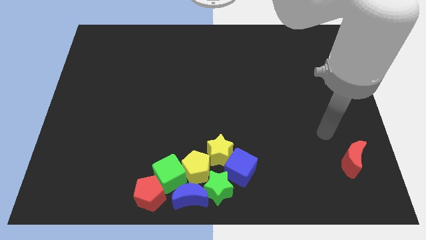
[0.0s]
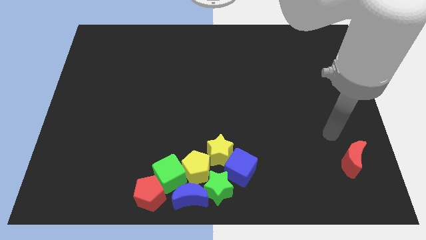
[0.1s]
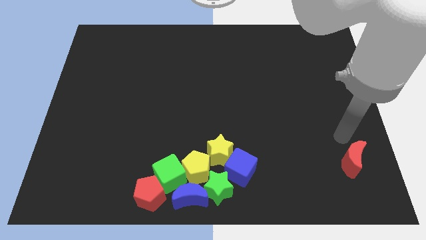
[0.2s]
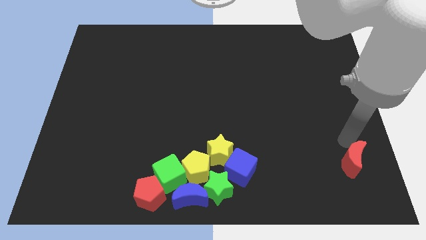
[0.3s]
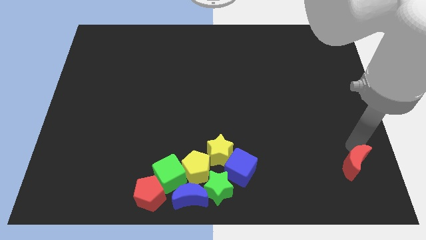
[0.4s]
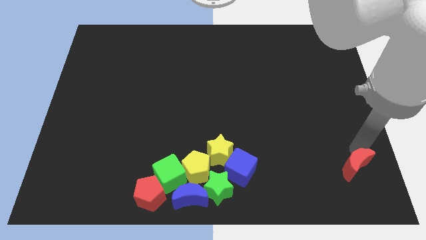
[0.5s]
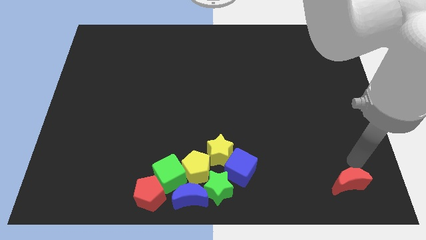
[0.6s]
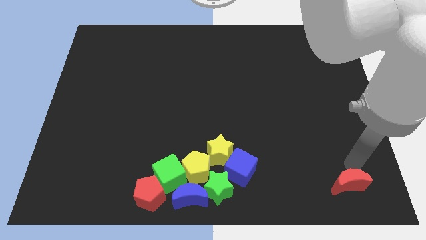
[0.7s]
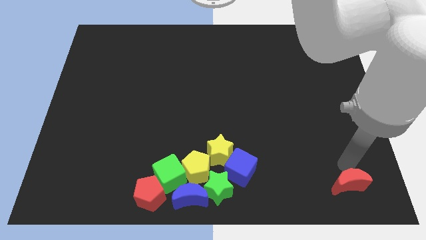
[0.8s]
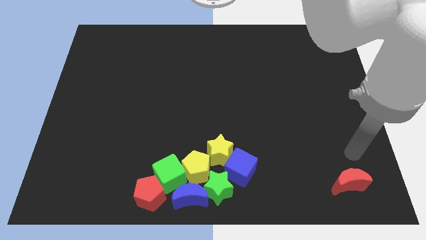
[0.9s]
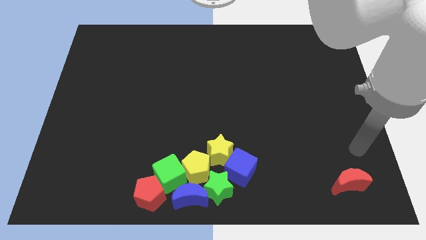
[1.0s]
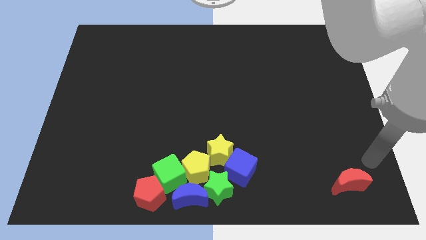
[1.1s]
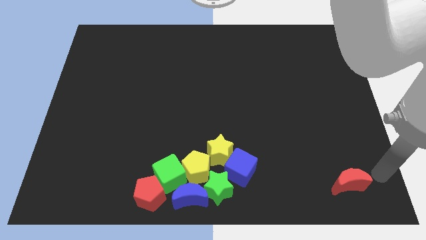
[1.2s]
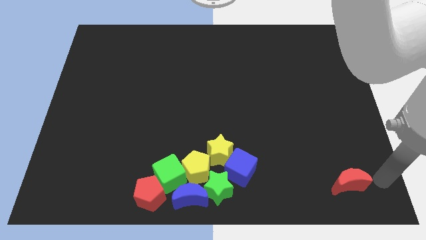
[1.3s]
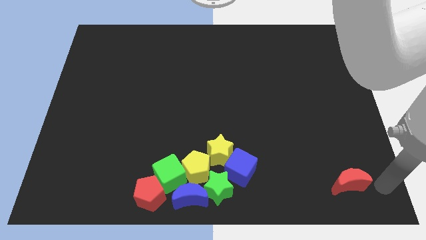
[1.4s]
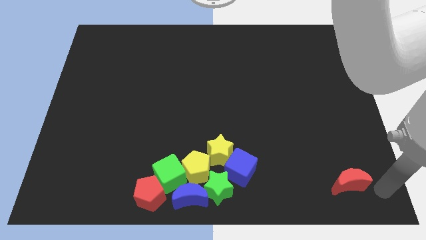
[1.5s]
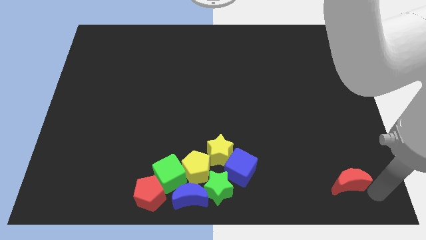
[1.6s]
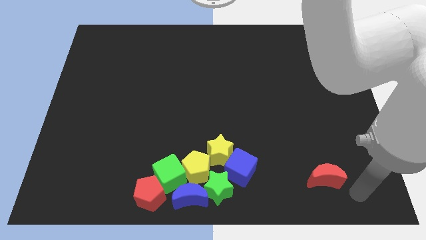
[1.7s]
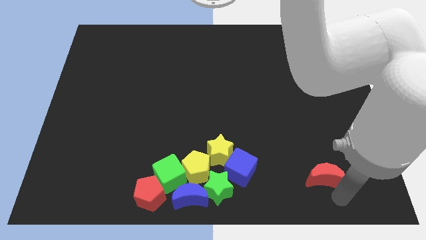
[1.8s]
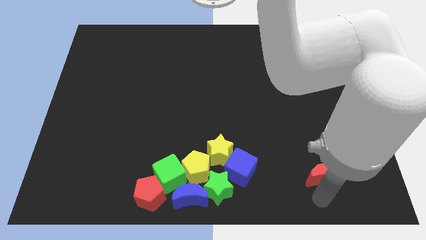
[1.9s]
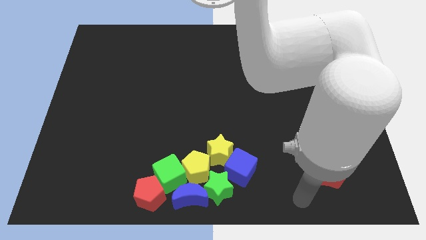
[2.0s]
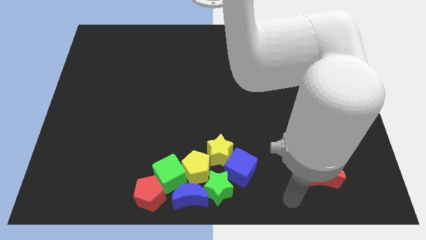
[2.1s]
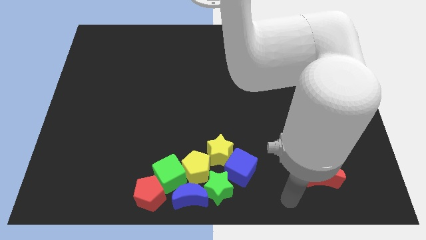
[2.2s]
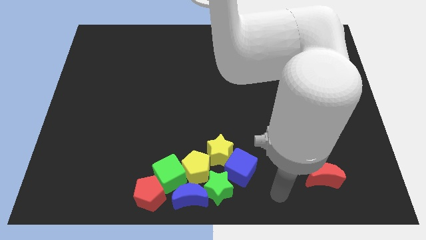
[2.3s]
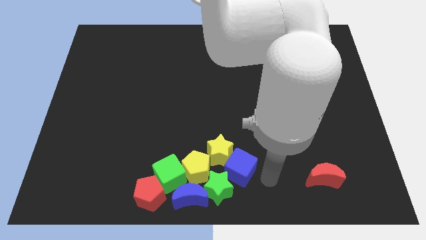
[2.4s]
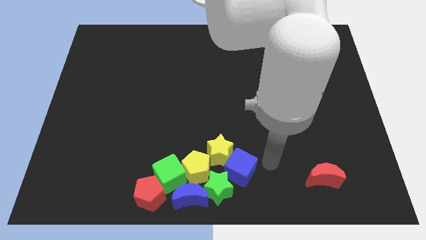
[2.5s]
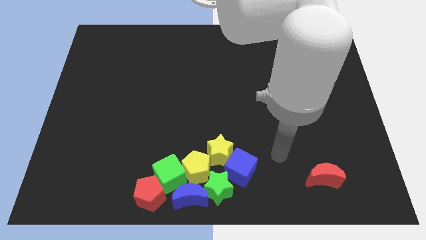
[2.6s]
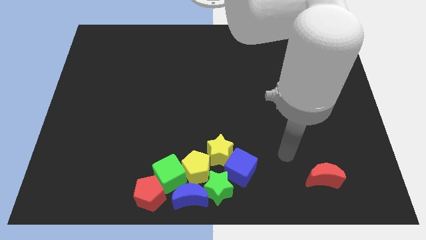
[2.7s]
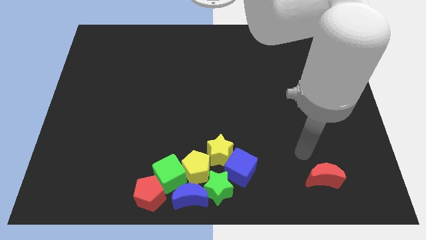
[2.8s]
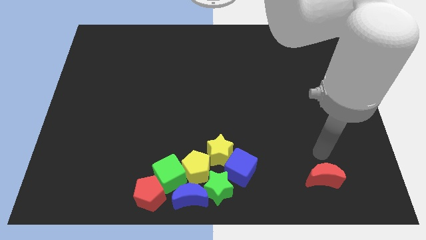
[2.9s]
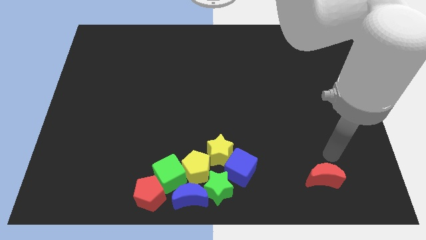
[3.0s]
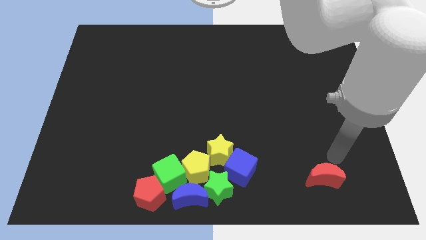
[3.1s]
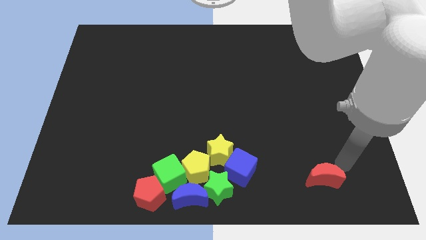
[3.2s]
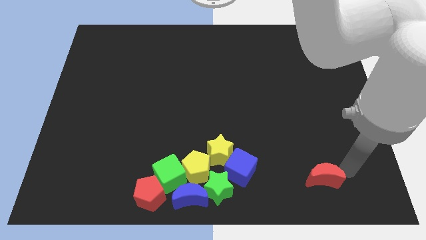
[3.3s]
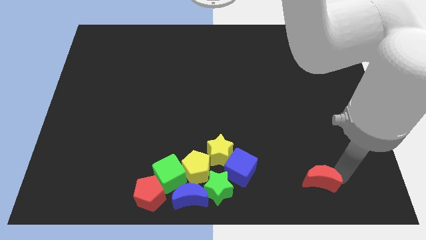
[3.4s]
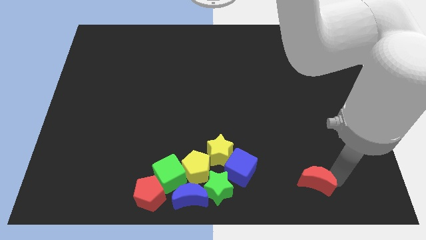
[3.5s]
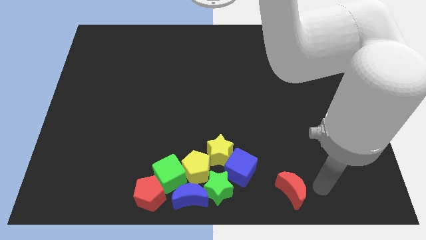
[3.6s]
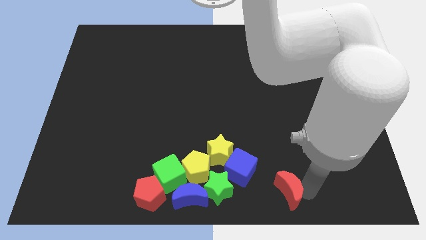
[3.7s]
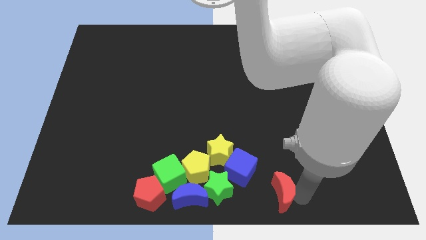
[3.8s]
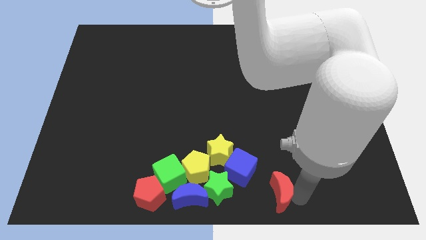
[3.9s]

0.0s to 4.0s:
place red moon to the bottom right of the blue cube

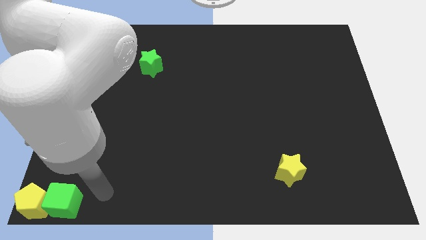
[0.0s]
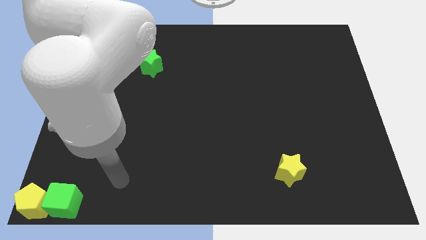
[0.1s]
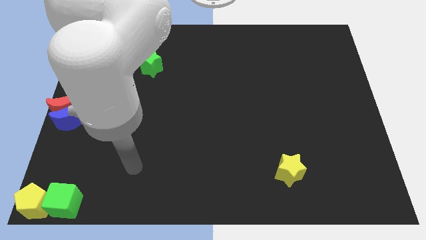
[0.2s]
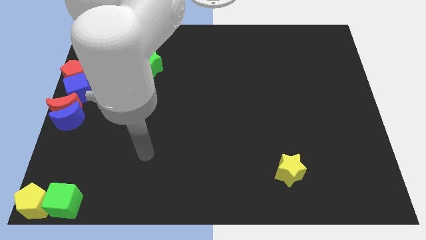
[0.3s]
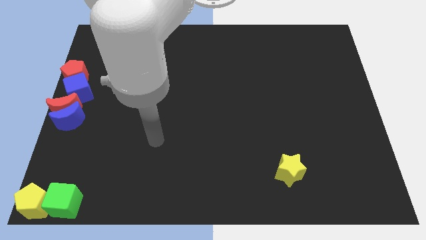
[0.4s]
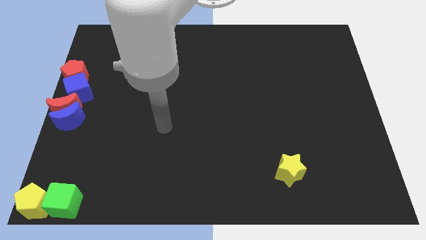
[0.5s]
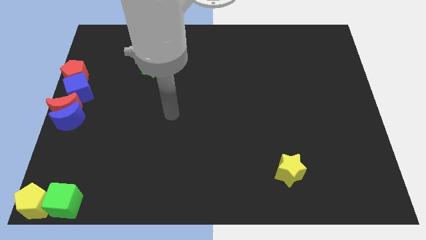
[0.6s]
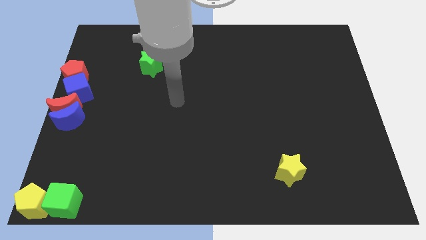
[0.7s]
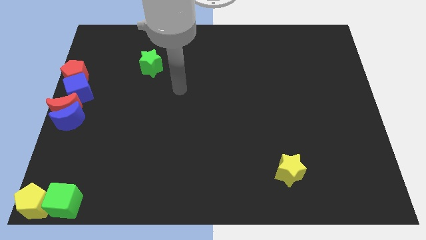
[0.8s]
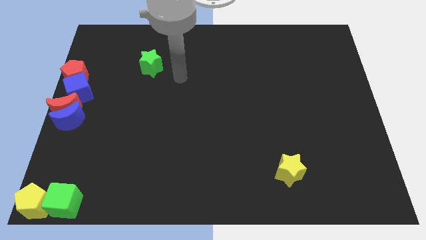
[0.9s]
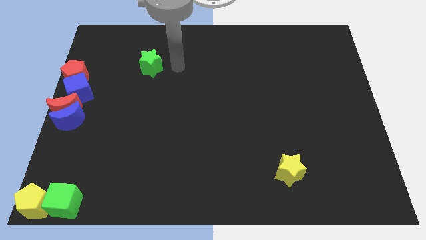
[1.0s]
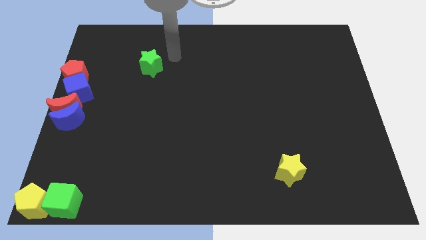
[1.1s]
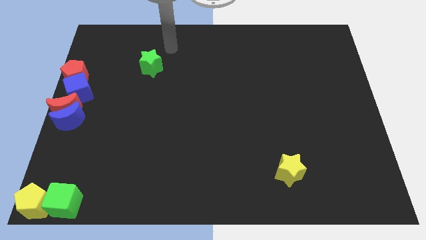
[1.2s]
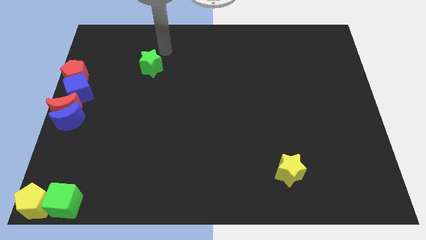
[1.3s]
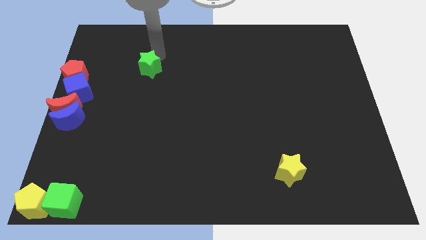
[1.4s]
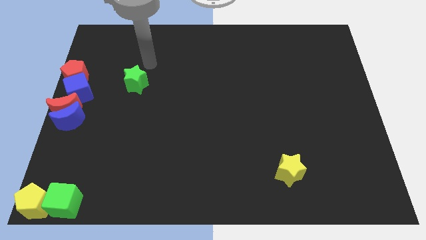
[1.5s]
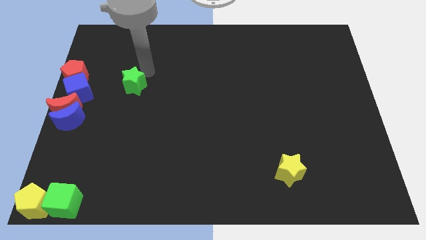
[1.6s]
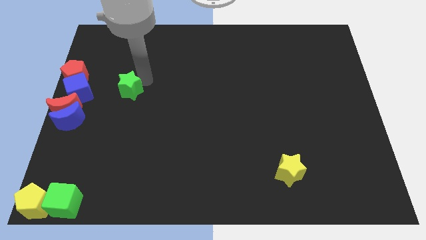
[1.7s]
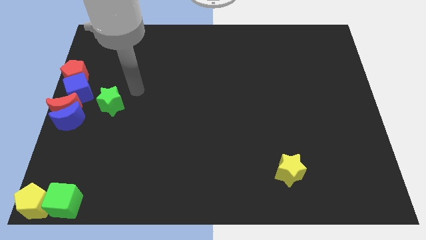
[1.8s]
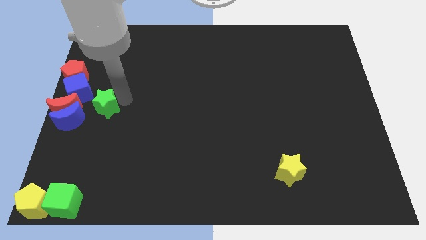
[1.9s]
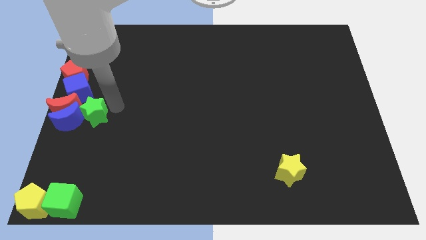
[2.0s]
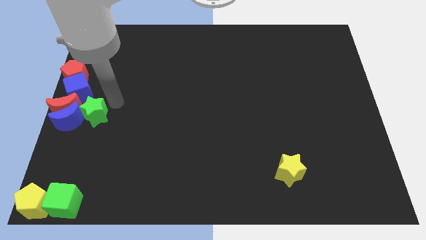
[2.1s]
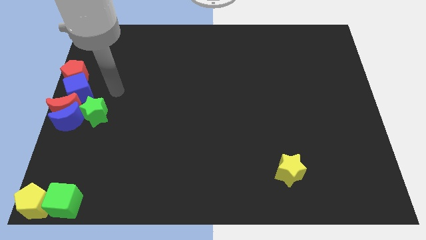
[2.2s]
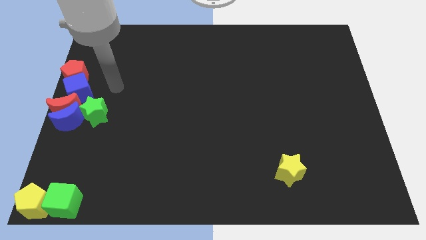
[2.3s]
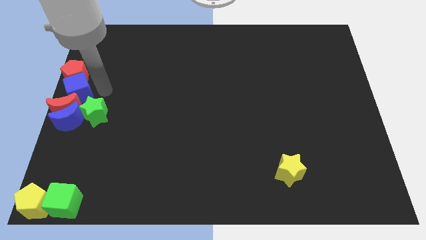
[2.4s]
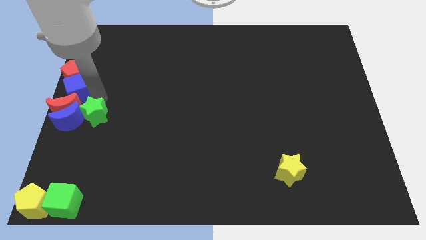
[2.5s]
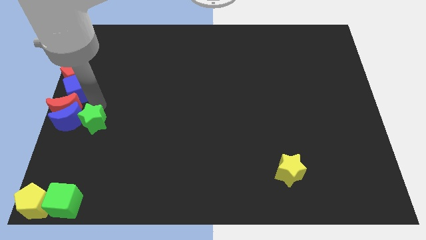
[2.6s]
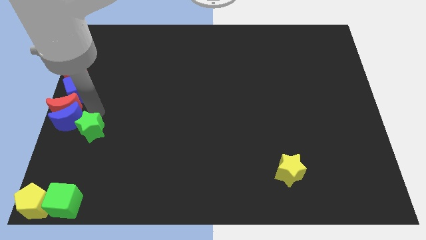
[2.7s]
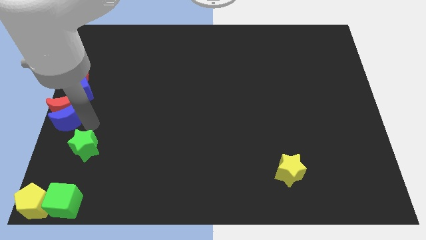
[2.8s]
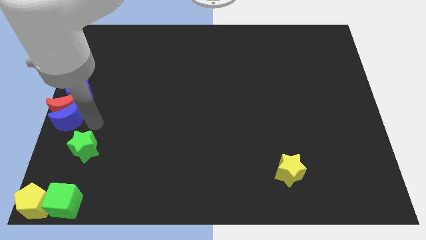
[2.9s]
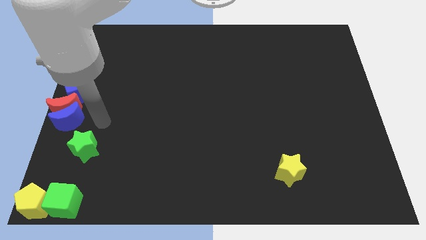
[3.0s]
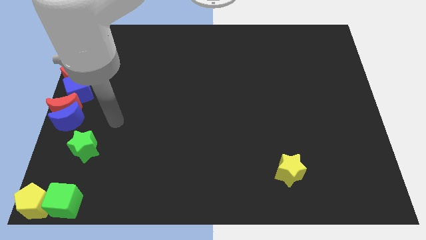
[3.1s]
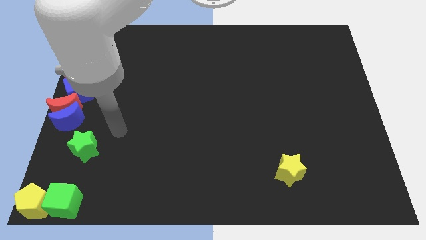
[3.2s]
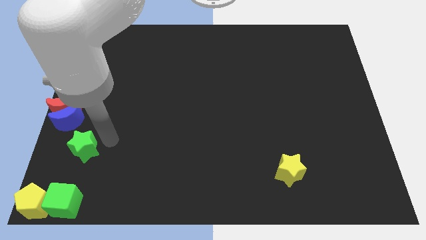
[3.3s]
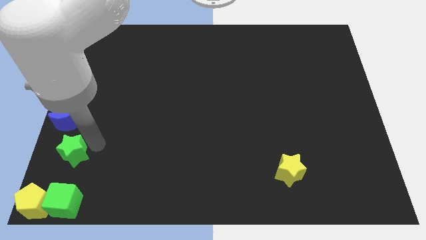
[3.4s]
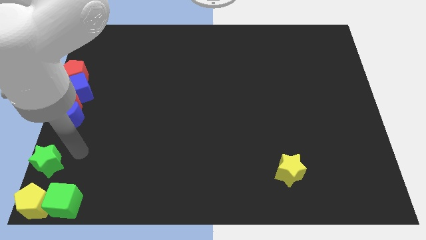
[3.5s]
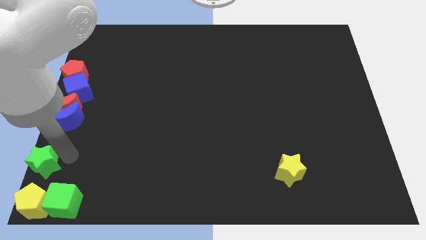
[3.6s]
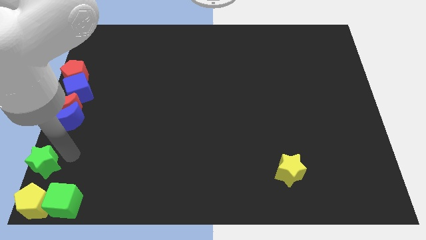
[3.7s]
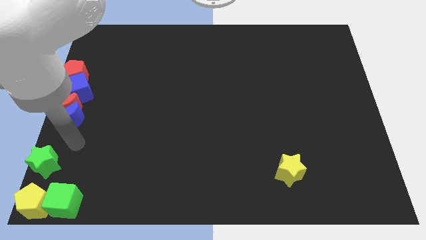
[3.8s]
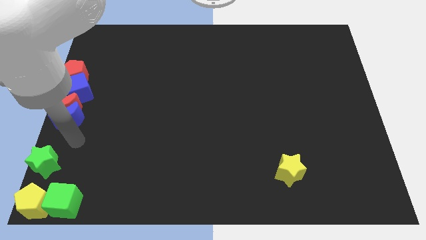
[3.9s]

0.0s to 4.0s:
place the green star at the top of yellow pentagon

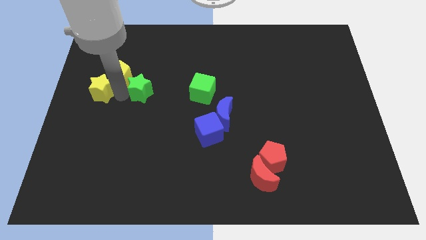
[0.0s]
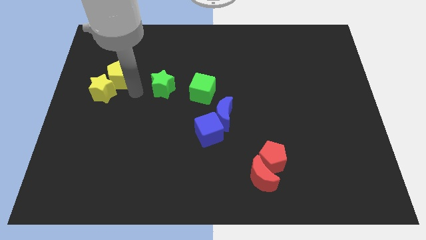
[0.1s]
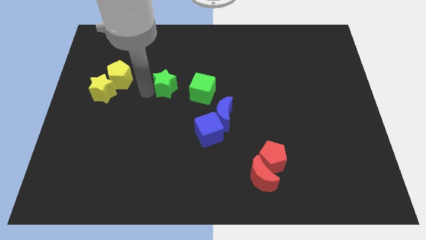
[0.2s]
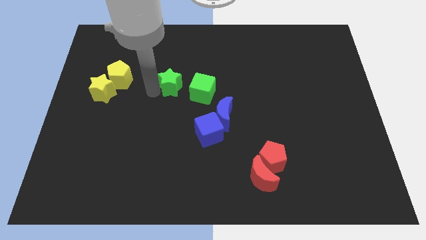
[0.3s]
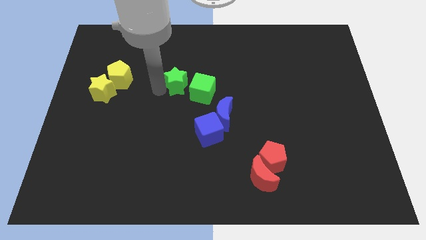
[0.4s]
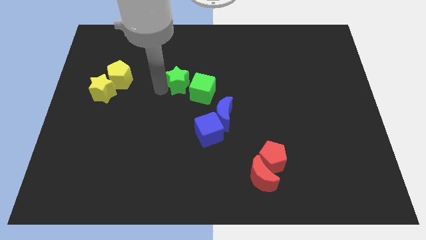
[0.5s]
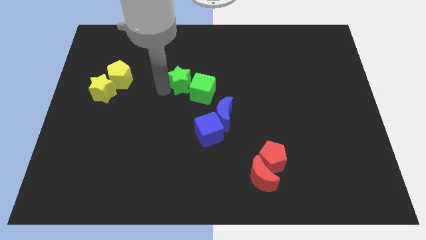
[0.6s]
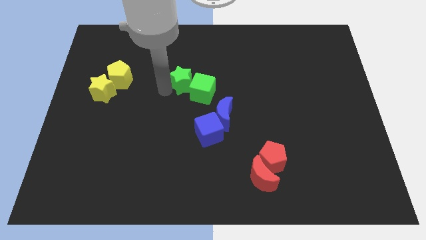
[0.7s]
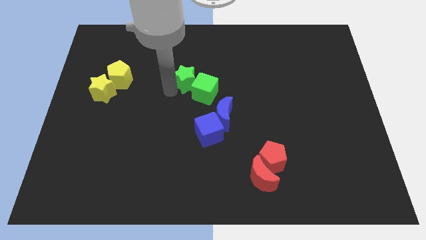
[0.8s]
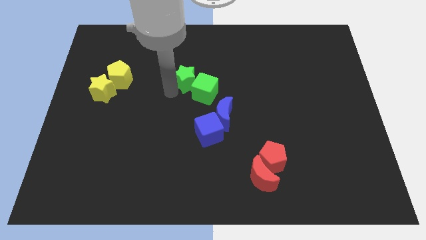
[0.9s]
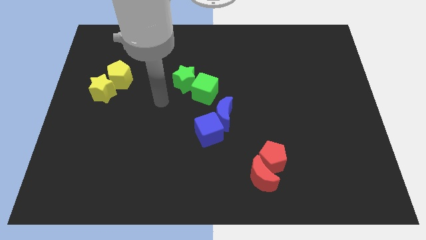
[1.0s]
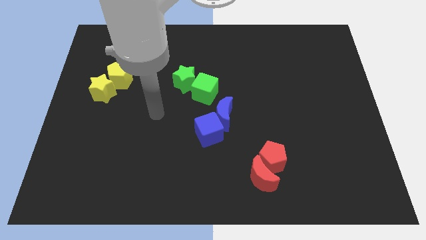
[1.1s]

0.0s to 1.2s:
slide the green star into the green cube
